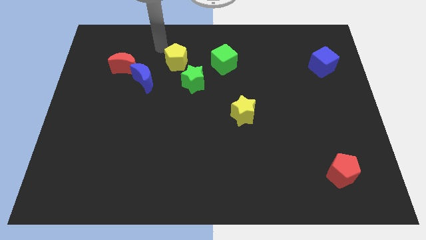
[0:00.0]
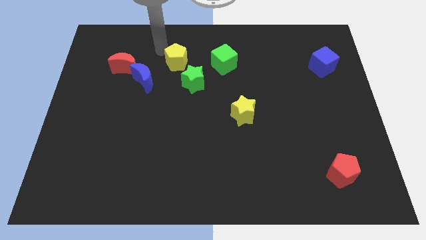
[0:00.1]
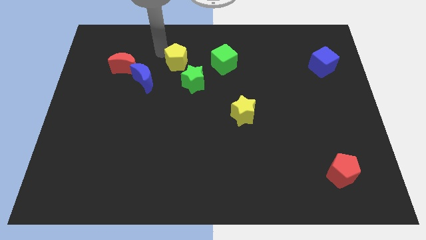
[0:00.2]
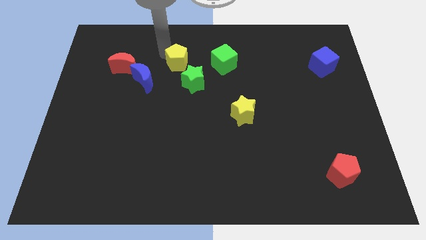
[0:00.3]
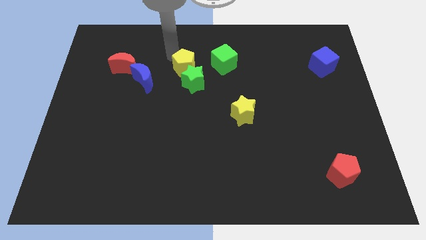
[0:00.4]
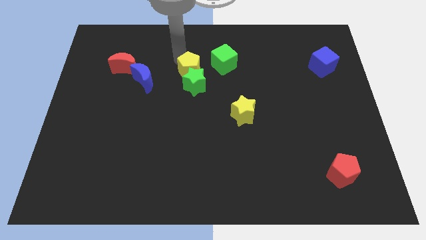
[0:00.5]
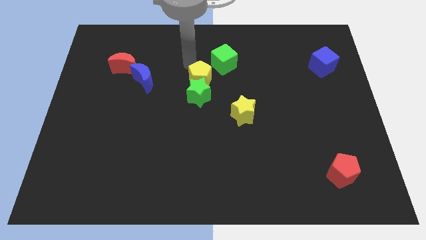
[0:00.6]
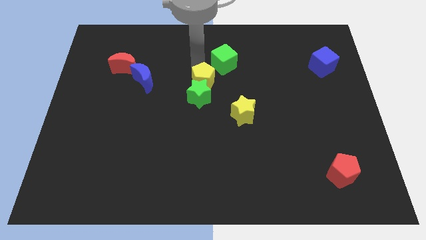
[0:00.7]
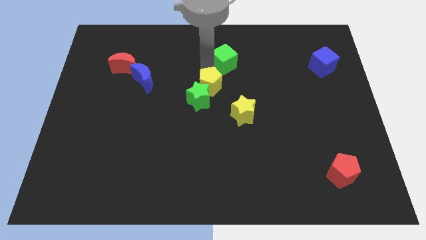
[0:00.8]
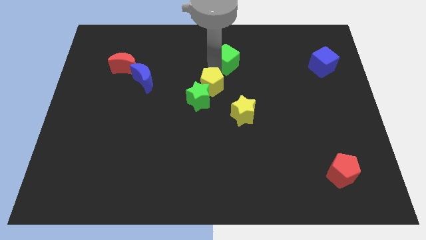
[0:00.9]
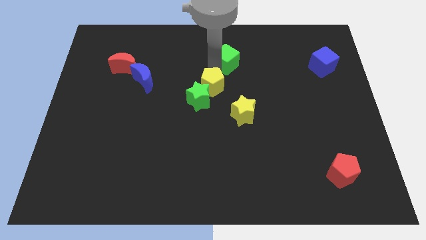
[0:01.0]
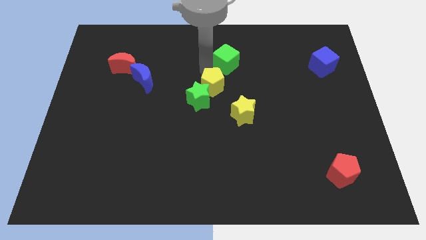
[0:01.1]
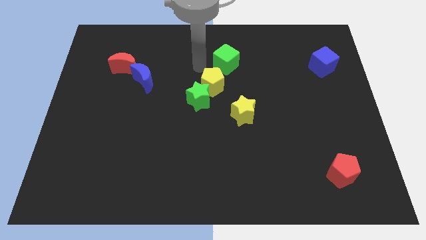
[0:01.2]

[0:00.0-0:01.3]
push the green star with the yellow pentagon towards the center of the board

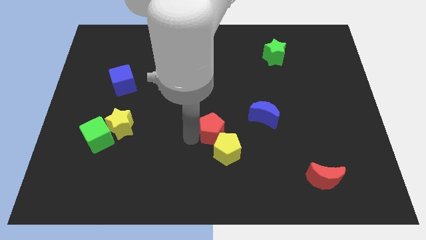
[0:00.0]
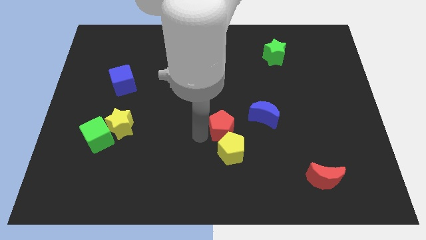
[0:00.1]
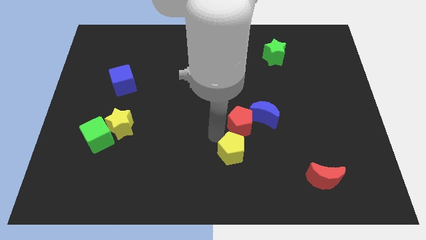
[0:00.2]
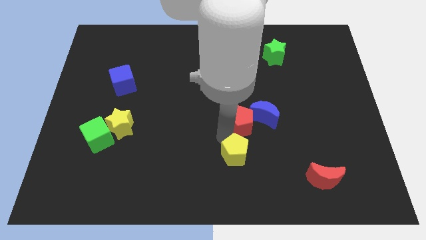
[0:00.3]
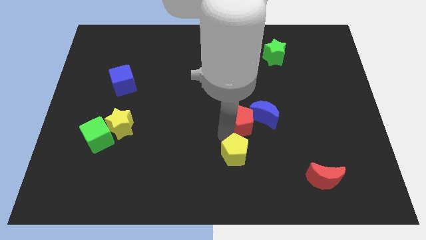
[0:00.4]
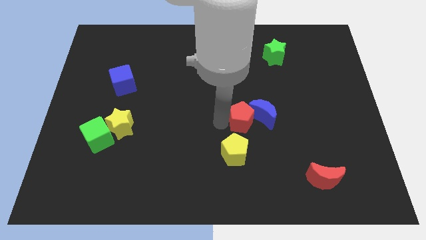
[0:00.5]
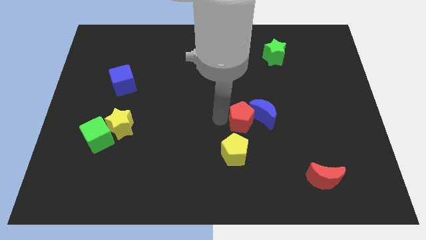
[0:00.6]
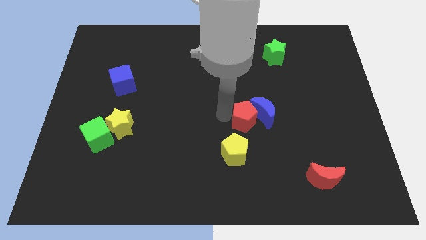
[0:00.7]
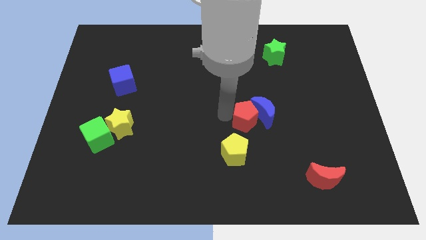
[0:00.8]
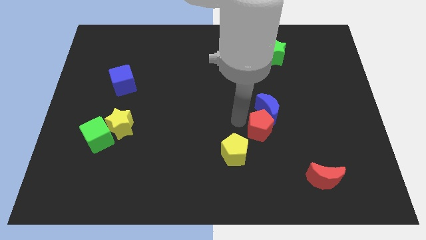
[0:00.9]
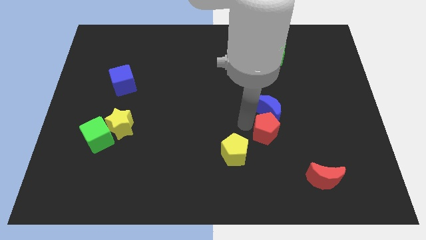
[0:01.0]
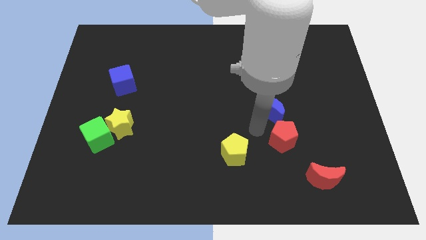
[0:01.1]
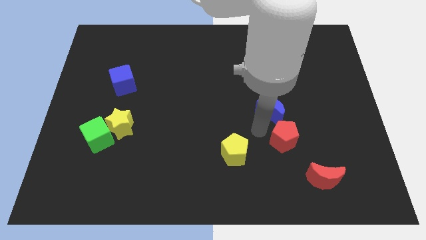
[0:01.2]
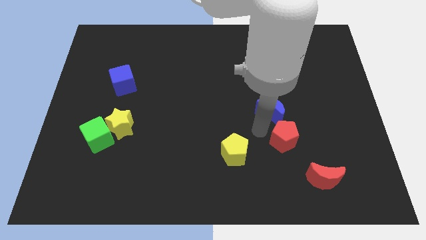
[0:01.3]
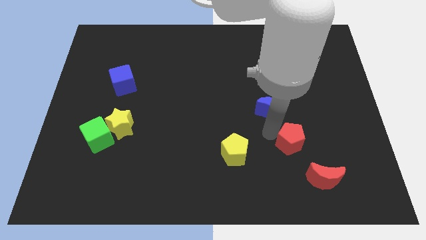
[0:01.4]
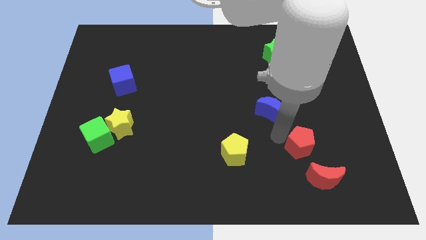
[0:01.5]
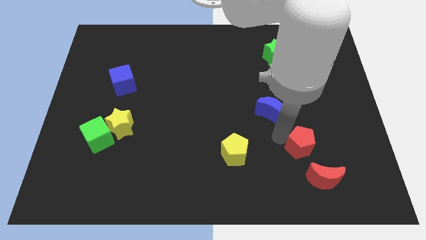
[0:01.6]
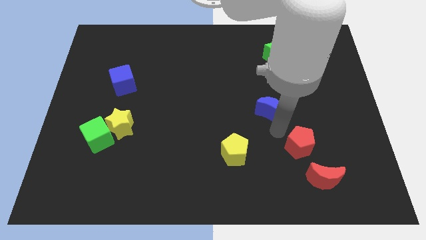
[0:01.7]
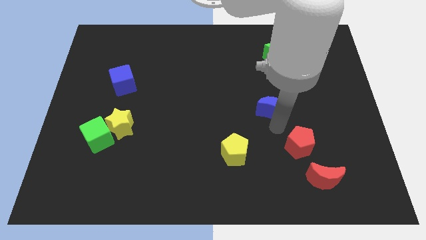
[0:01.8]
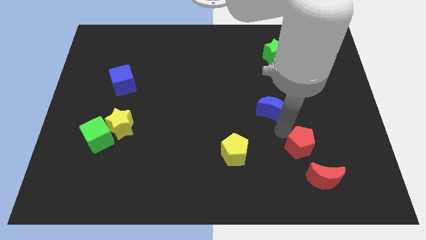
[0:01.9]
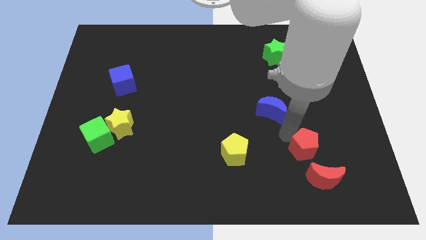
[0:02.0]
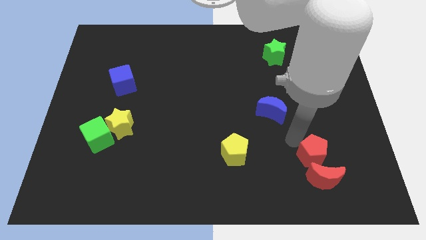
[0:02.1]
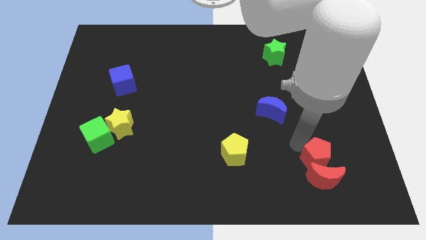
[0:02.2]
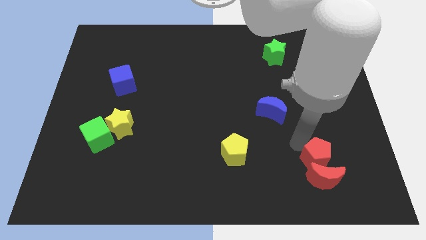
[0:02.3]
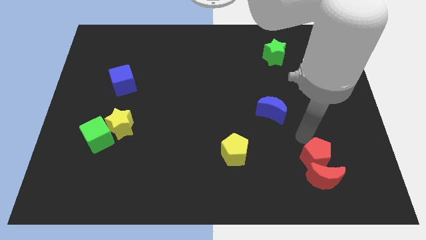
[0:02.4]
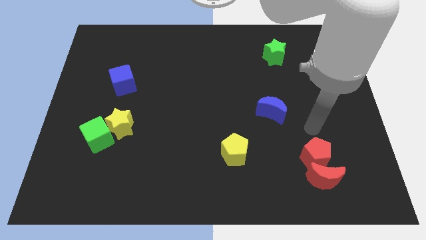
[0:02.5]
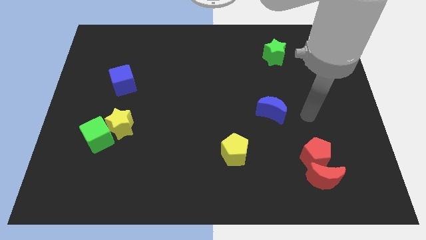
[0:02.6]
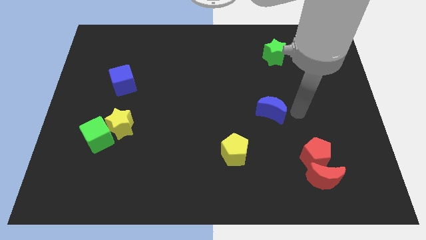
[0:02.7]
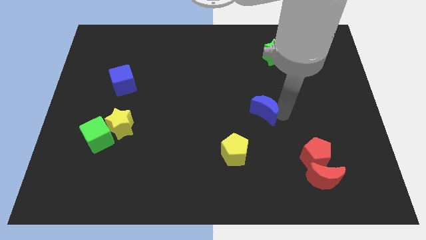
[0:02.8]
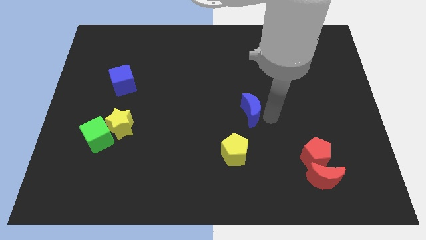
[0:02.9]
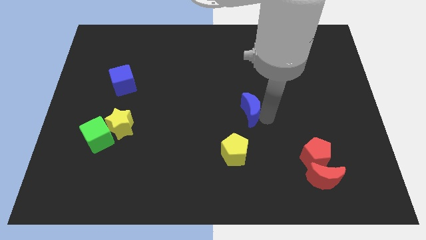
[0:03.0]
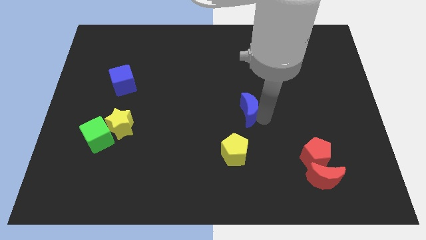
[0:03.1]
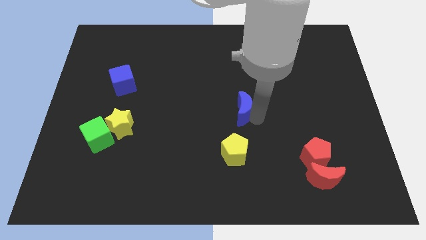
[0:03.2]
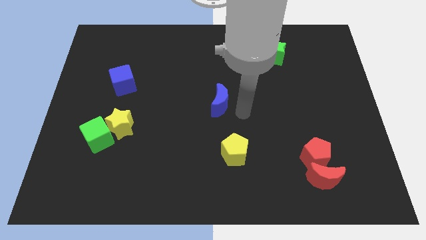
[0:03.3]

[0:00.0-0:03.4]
place the blue moon above the yellow pentagon

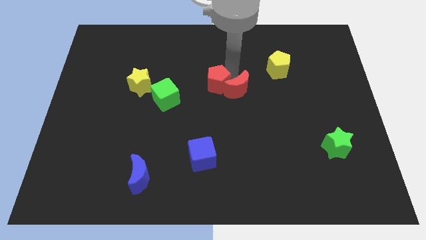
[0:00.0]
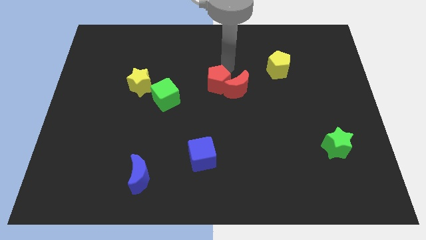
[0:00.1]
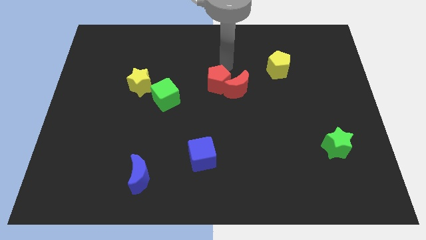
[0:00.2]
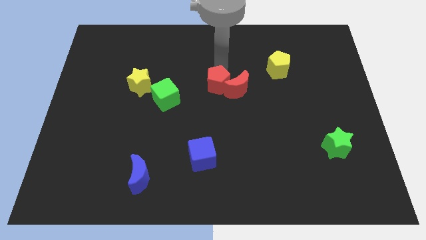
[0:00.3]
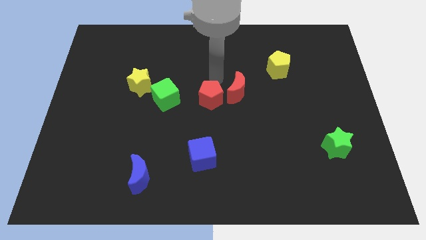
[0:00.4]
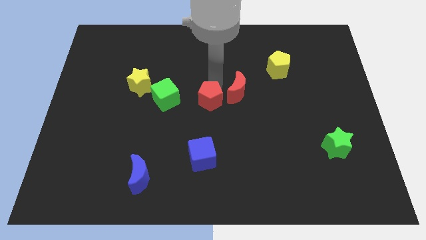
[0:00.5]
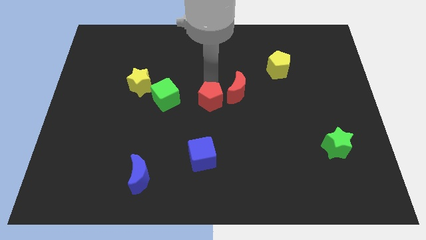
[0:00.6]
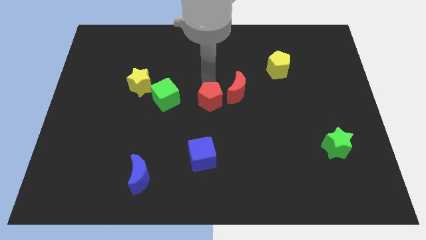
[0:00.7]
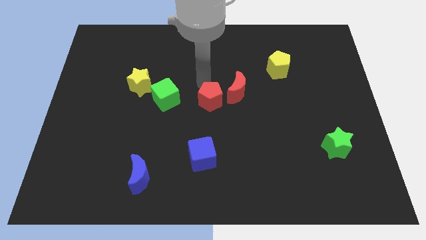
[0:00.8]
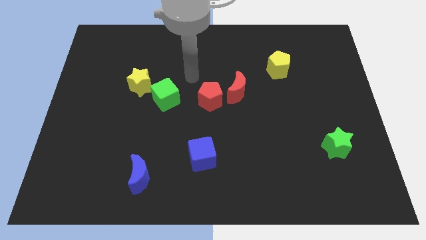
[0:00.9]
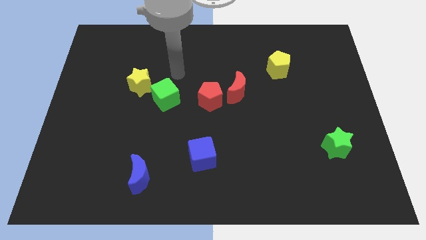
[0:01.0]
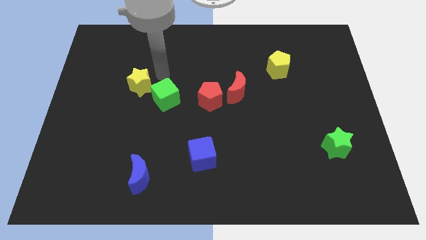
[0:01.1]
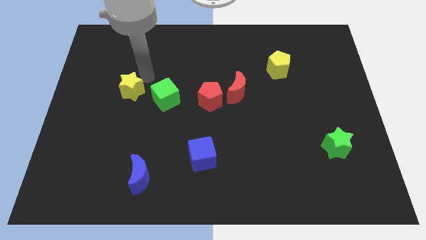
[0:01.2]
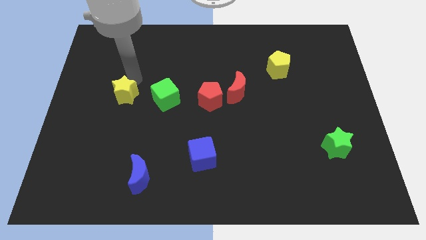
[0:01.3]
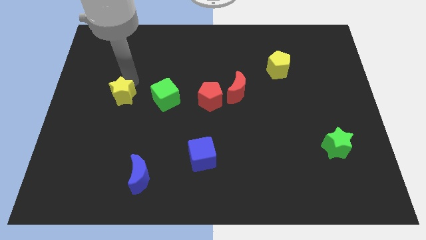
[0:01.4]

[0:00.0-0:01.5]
push the red pentagon to the right of the green cube horizontally

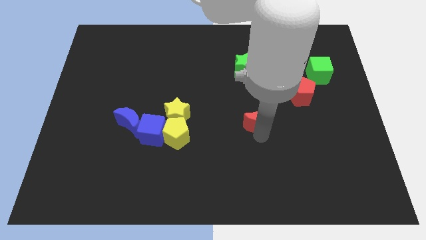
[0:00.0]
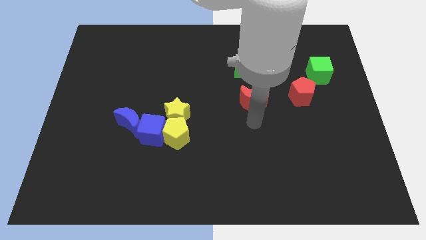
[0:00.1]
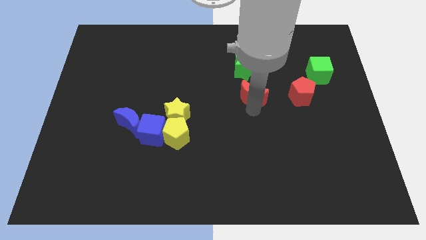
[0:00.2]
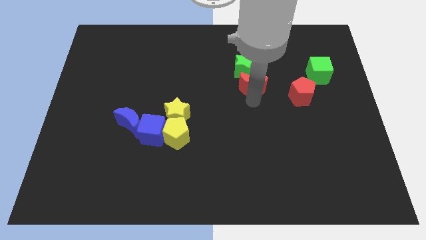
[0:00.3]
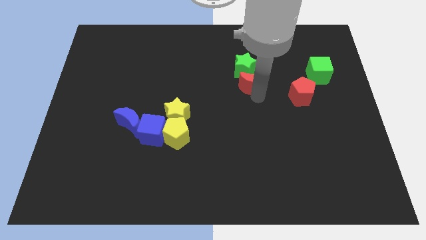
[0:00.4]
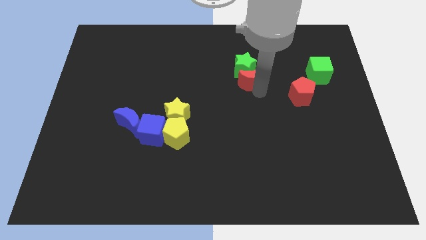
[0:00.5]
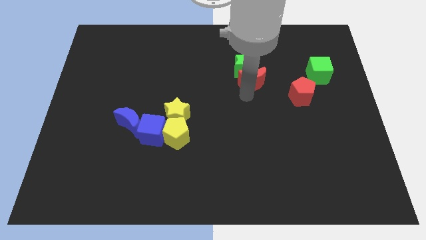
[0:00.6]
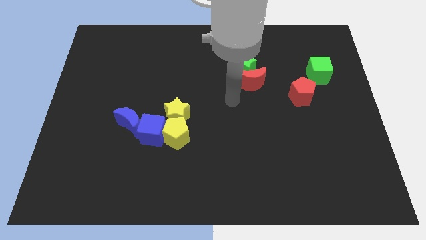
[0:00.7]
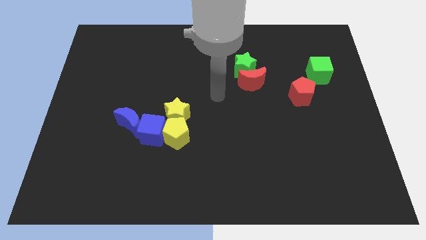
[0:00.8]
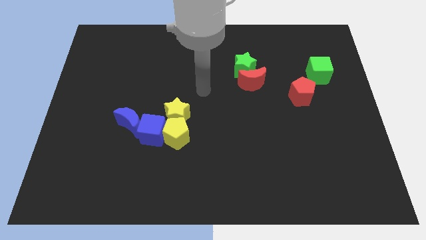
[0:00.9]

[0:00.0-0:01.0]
place the red moon below the green star

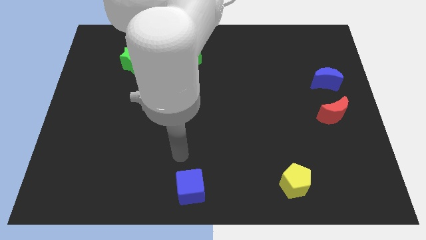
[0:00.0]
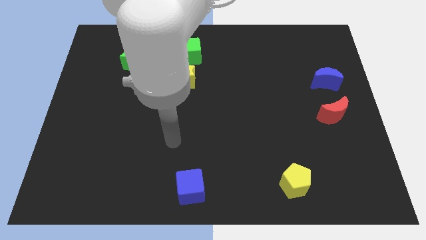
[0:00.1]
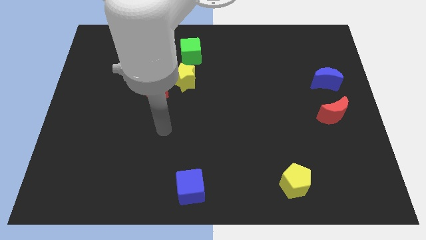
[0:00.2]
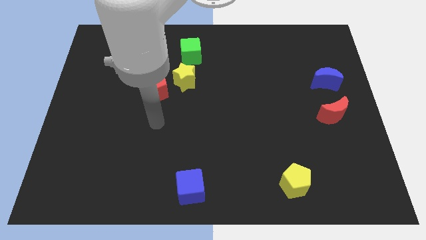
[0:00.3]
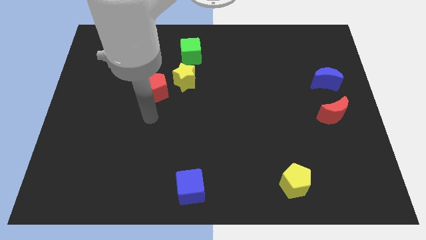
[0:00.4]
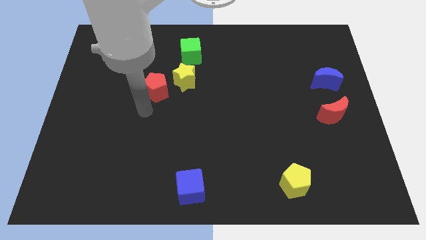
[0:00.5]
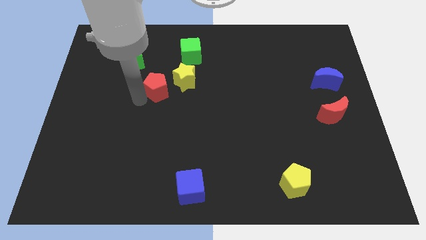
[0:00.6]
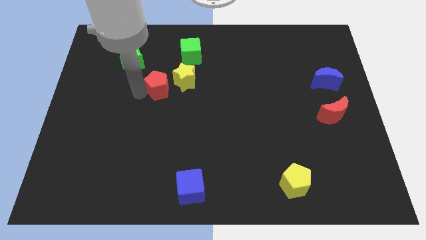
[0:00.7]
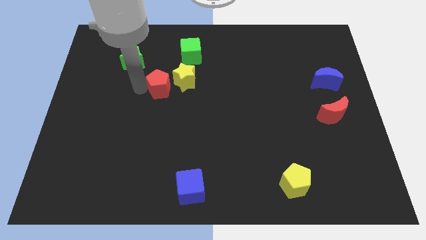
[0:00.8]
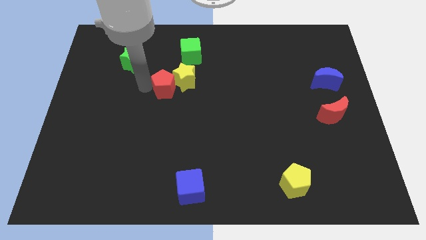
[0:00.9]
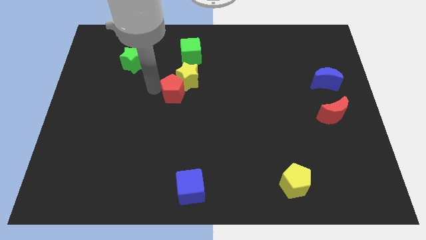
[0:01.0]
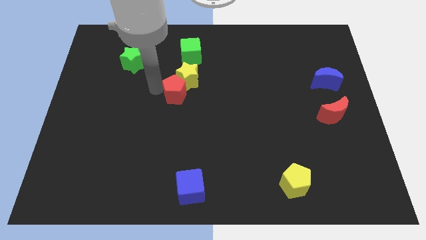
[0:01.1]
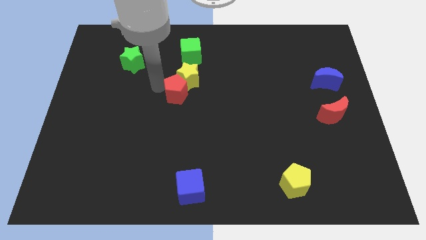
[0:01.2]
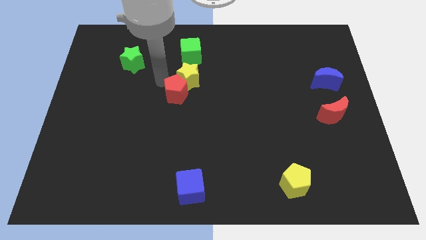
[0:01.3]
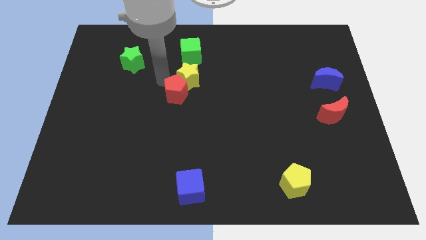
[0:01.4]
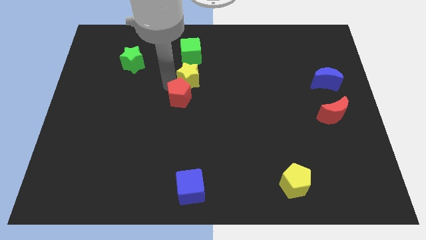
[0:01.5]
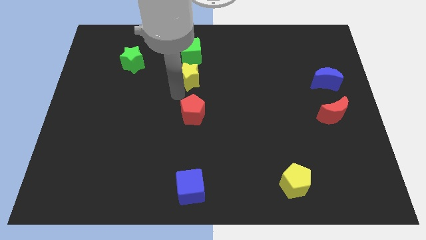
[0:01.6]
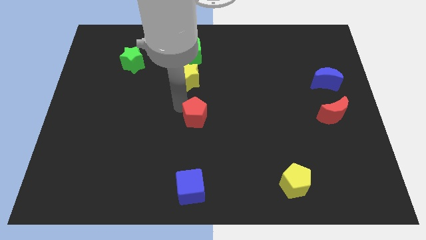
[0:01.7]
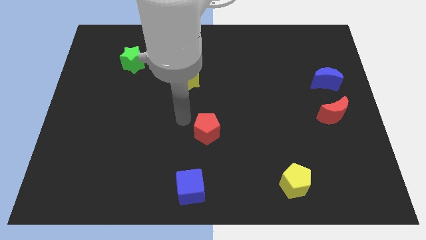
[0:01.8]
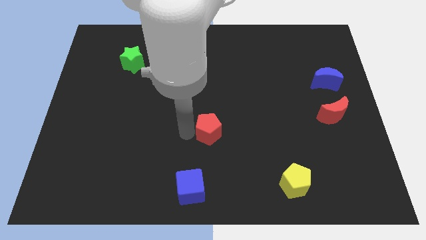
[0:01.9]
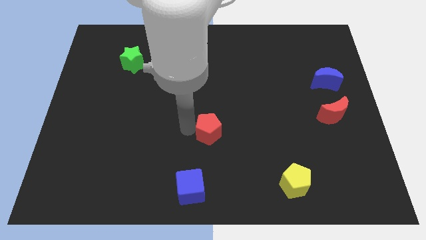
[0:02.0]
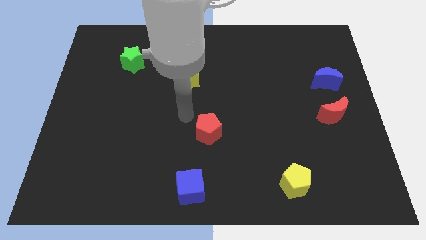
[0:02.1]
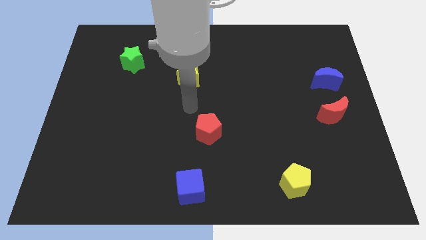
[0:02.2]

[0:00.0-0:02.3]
push the red pentagon towards bottom side of the board
